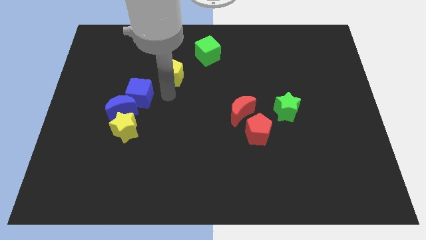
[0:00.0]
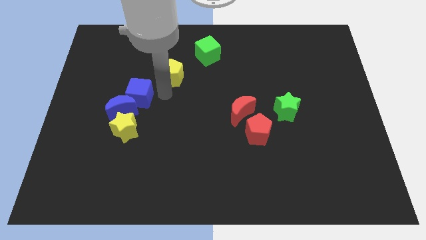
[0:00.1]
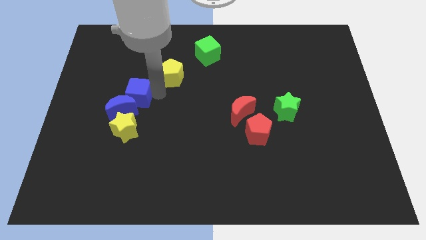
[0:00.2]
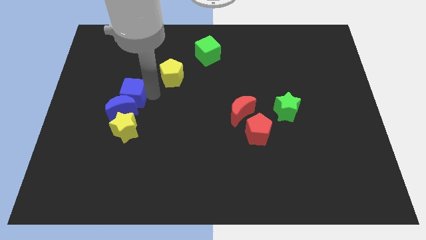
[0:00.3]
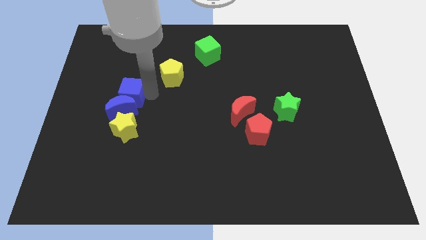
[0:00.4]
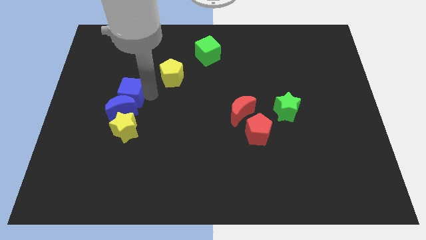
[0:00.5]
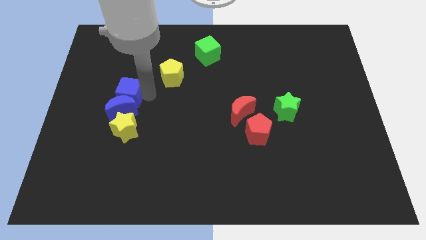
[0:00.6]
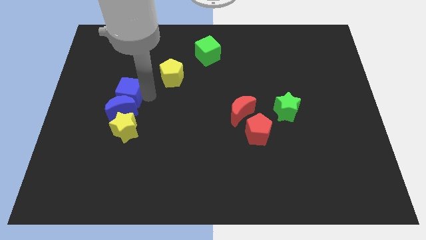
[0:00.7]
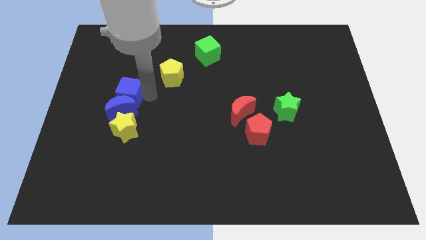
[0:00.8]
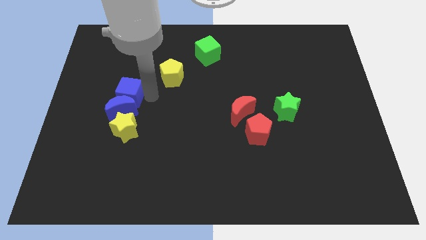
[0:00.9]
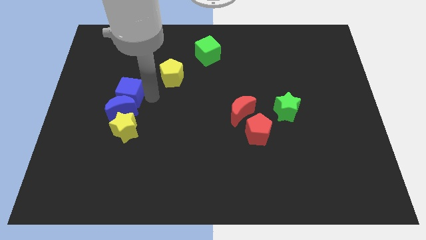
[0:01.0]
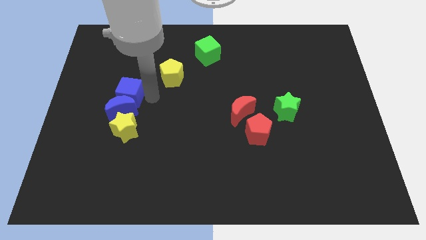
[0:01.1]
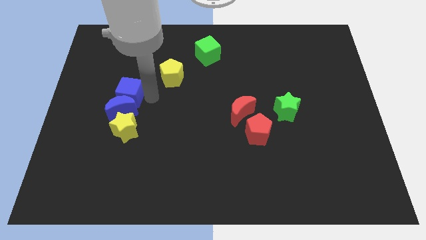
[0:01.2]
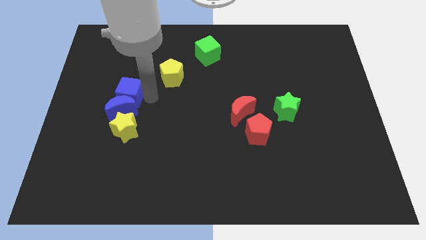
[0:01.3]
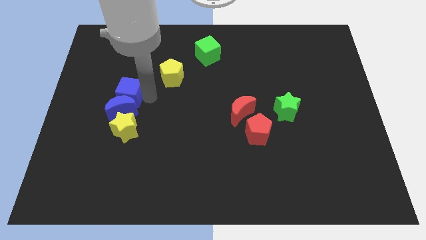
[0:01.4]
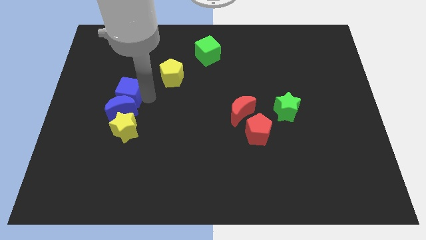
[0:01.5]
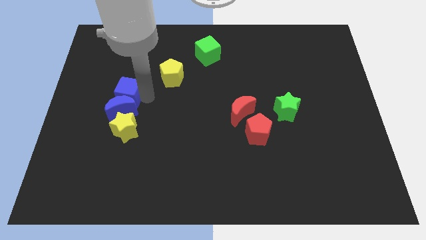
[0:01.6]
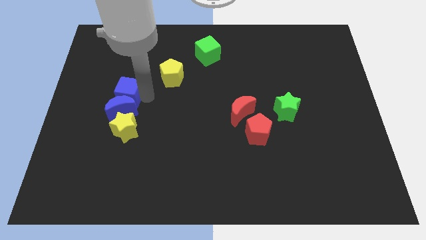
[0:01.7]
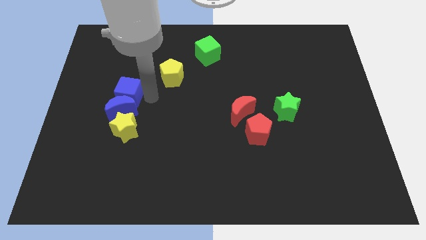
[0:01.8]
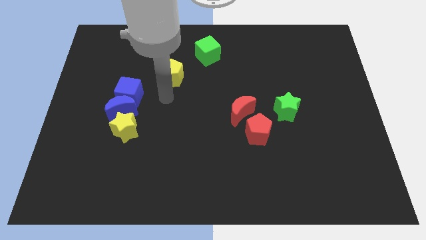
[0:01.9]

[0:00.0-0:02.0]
adjust the blue cube at the top side of the blue crescent

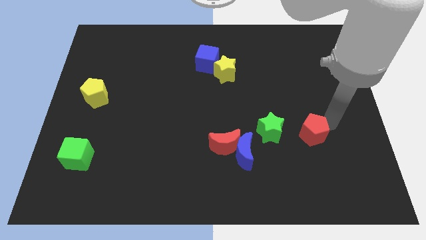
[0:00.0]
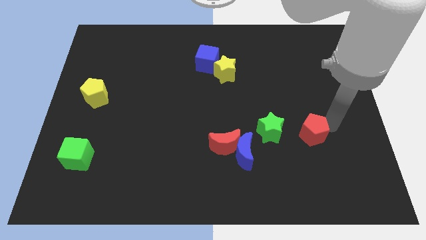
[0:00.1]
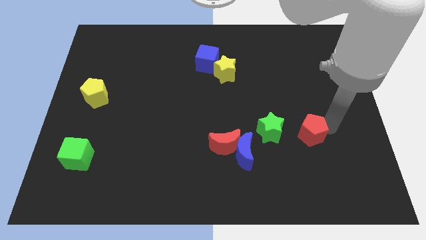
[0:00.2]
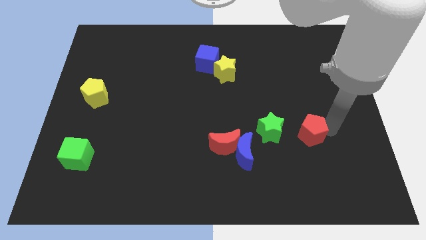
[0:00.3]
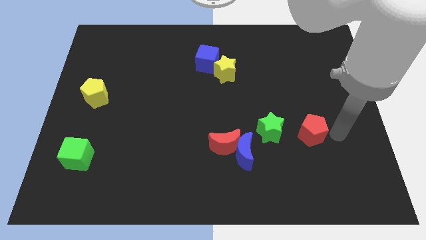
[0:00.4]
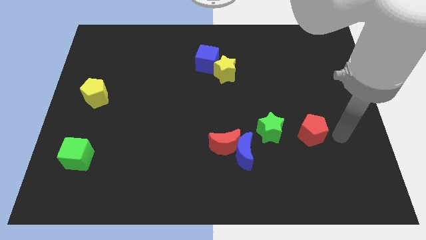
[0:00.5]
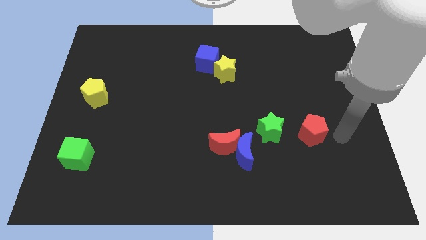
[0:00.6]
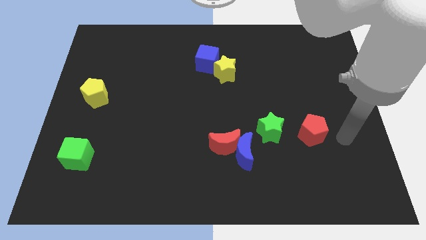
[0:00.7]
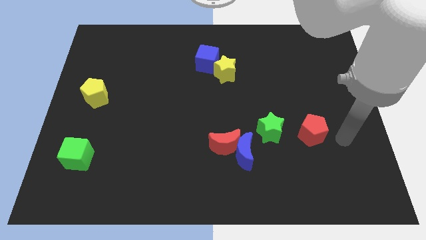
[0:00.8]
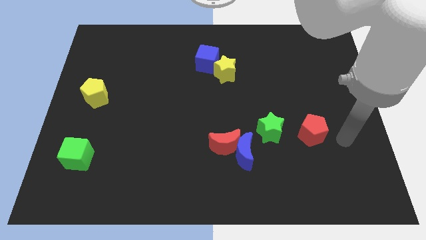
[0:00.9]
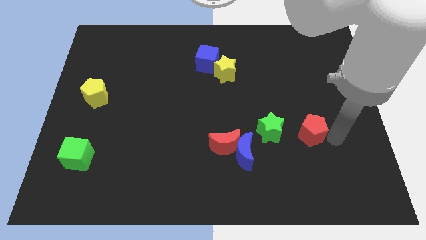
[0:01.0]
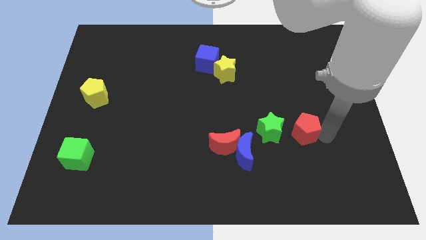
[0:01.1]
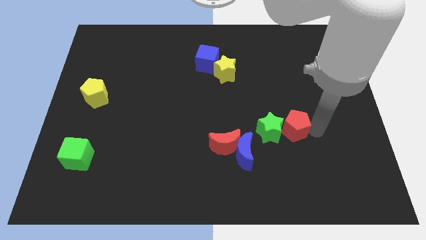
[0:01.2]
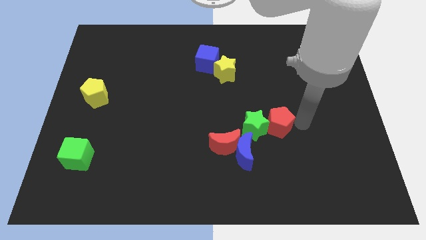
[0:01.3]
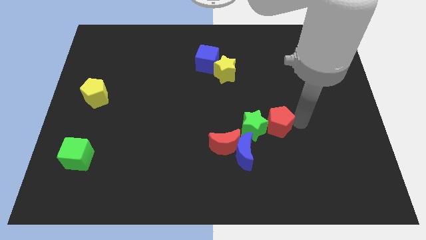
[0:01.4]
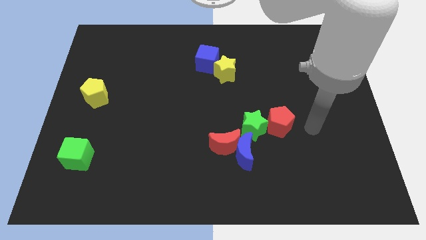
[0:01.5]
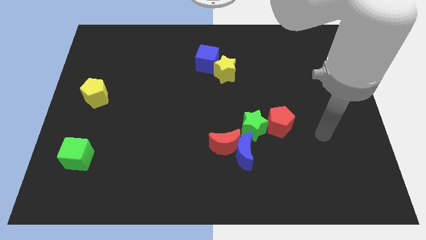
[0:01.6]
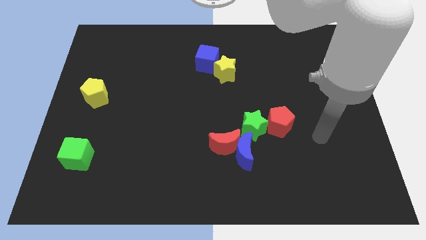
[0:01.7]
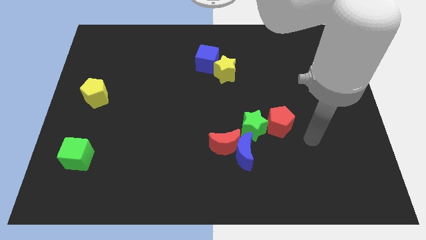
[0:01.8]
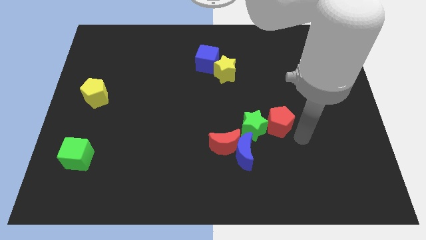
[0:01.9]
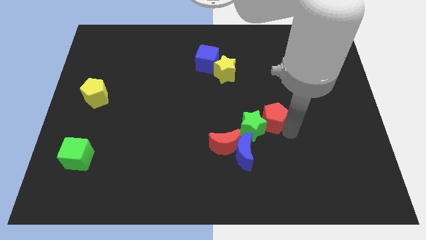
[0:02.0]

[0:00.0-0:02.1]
push red pentagon into green star

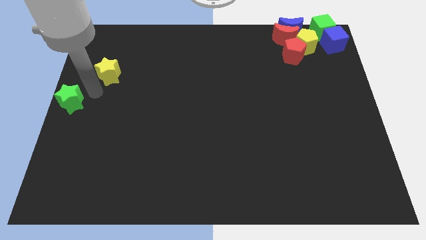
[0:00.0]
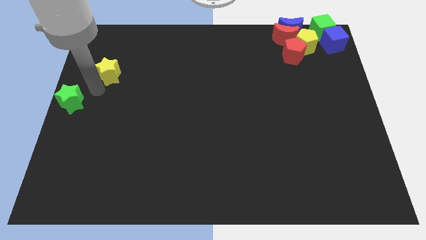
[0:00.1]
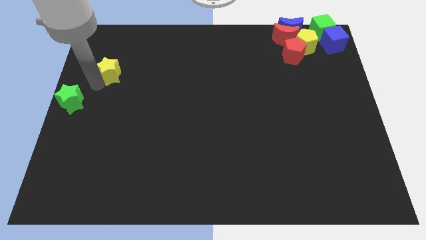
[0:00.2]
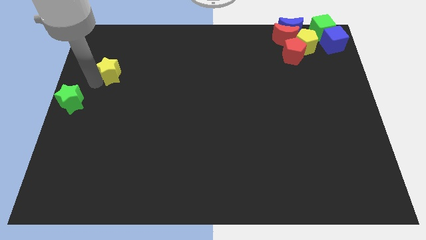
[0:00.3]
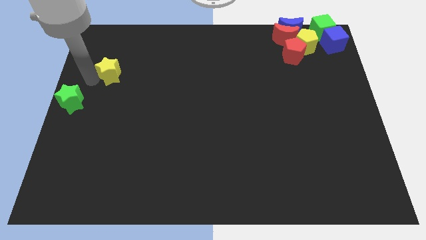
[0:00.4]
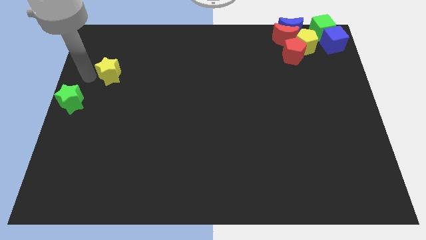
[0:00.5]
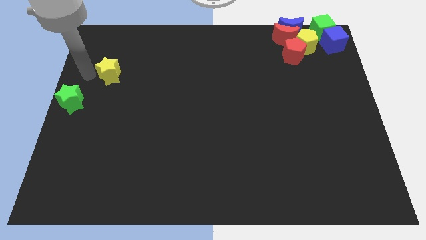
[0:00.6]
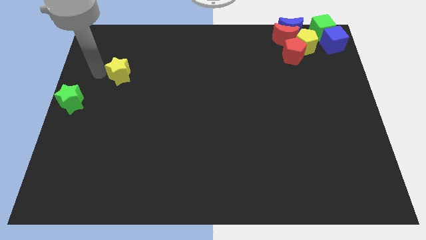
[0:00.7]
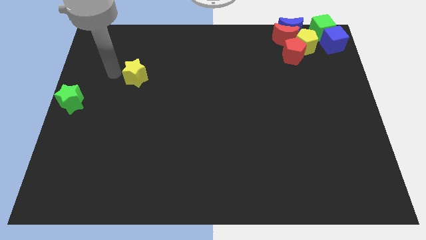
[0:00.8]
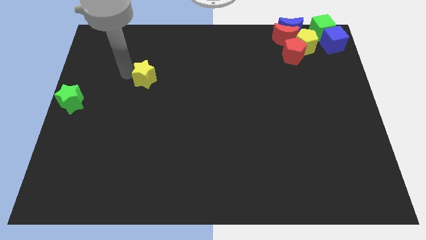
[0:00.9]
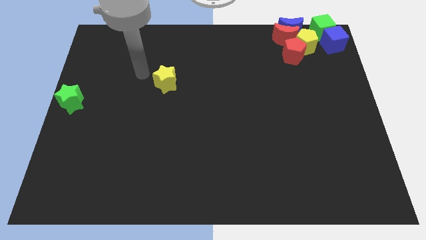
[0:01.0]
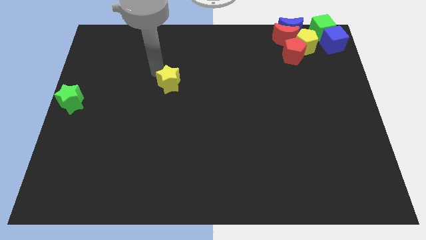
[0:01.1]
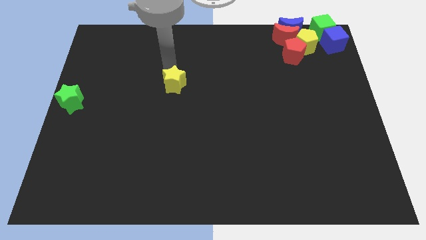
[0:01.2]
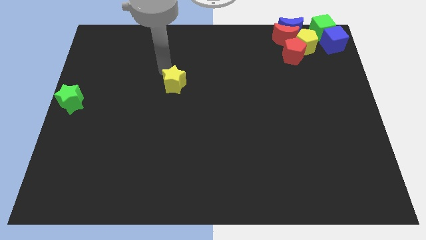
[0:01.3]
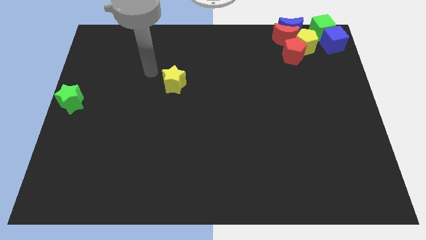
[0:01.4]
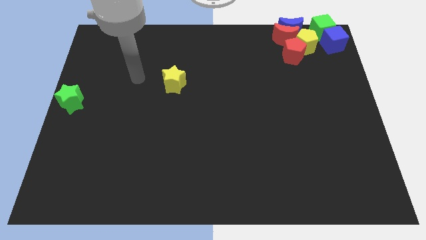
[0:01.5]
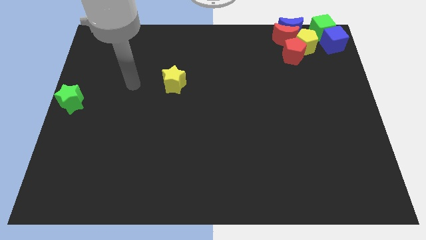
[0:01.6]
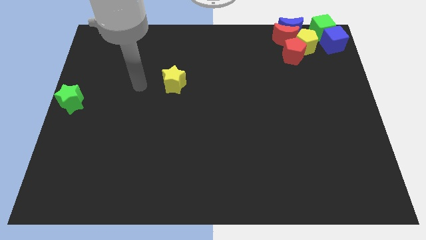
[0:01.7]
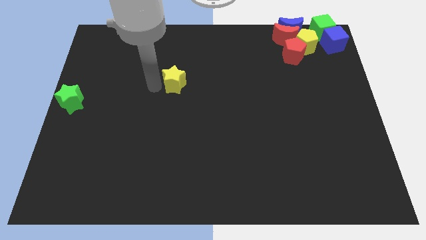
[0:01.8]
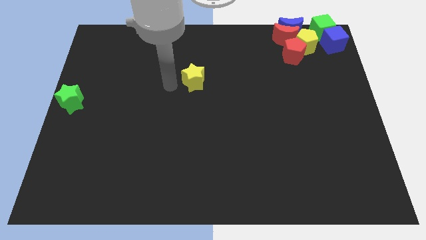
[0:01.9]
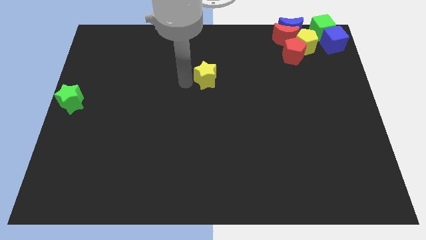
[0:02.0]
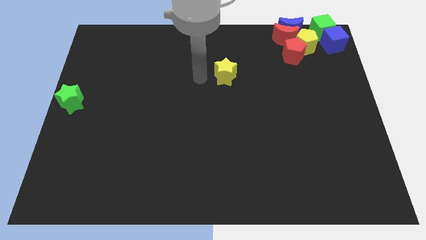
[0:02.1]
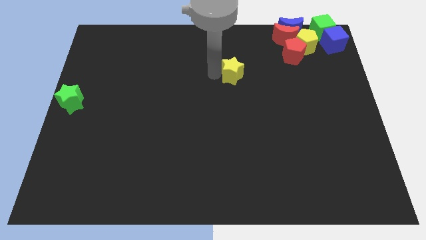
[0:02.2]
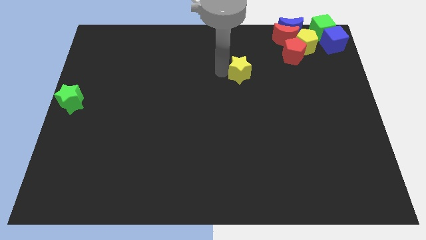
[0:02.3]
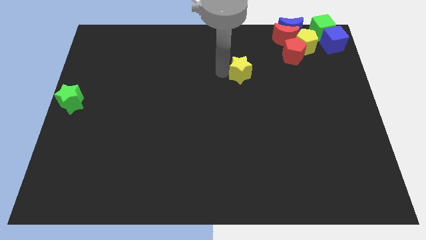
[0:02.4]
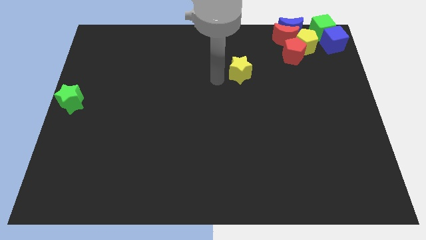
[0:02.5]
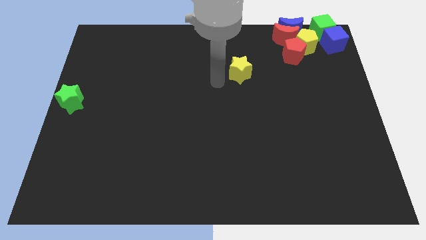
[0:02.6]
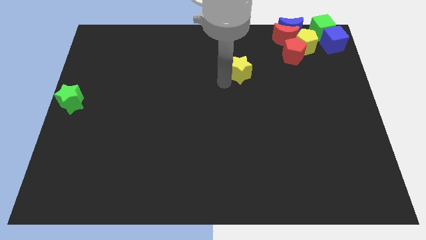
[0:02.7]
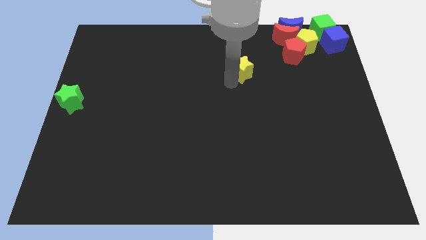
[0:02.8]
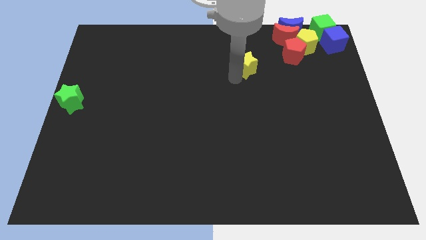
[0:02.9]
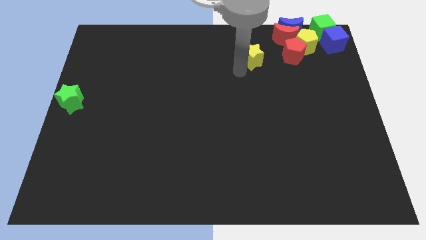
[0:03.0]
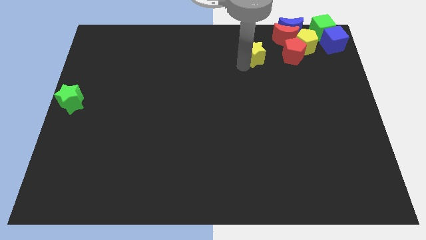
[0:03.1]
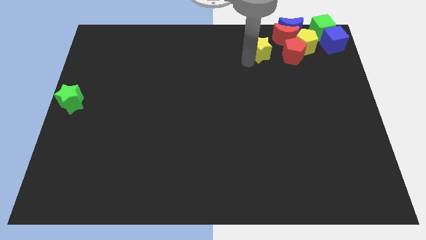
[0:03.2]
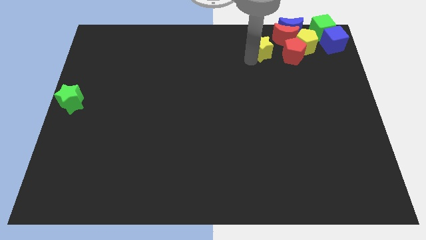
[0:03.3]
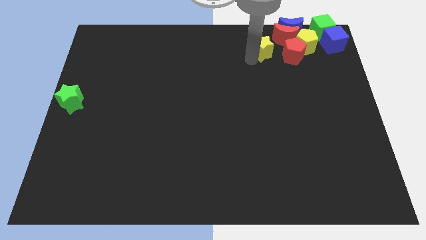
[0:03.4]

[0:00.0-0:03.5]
separate yellow star from green star

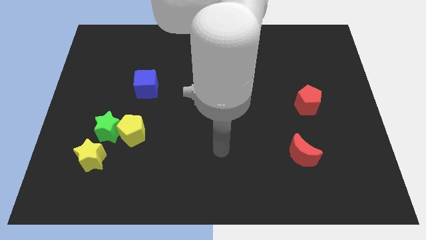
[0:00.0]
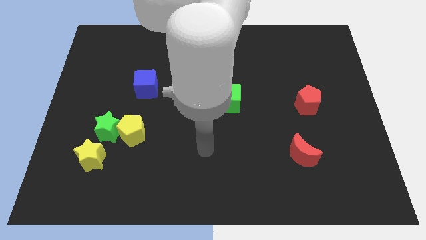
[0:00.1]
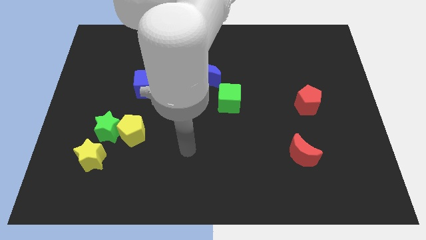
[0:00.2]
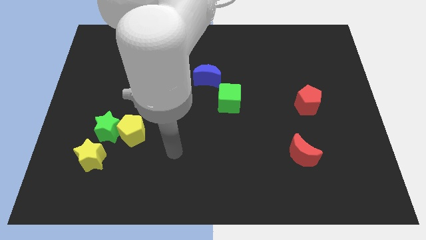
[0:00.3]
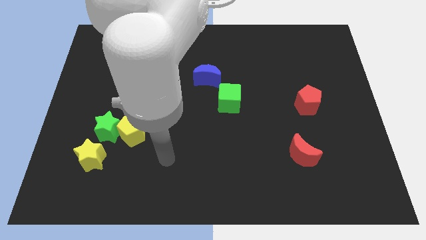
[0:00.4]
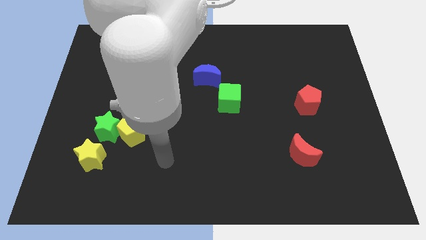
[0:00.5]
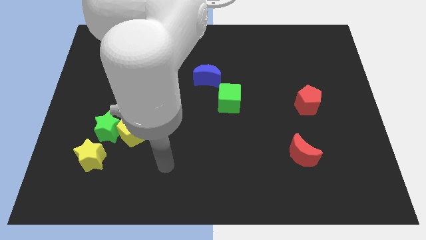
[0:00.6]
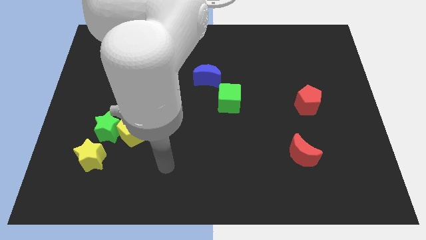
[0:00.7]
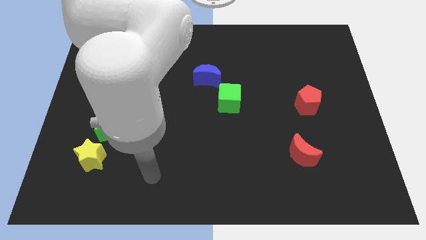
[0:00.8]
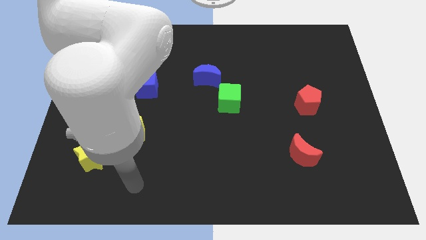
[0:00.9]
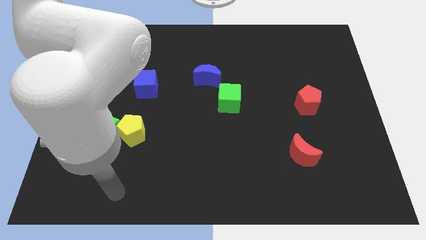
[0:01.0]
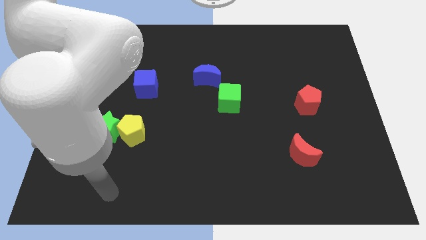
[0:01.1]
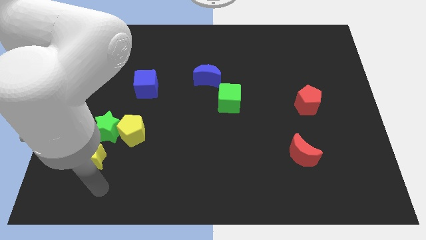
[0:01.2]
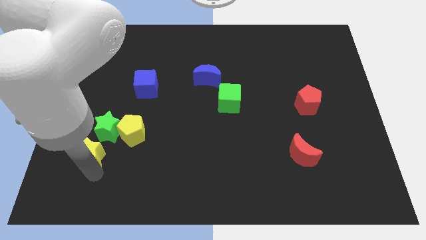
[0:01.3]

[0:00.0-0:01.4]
point your arm at the bottom of the yellow star
